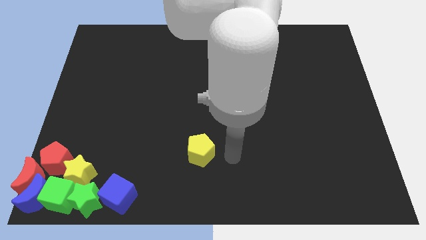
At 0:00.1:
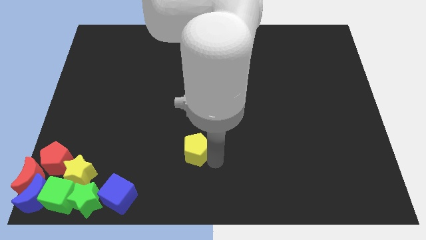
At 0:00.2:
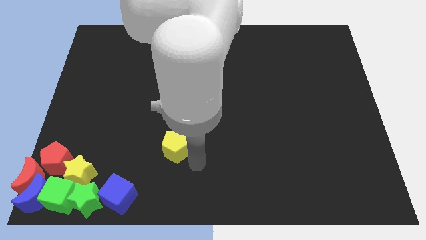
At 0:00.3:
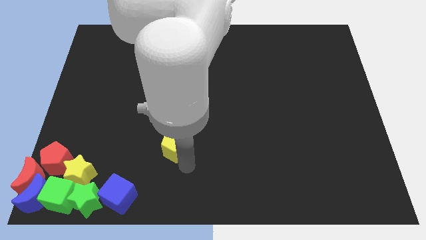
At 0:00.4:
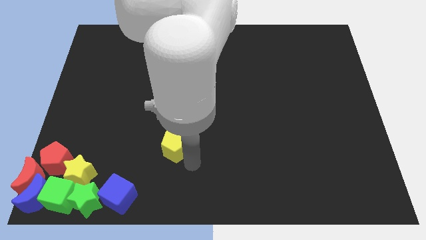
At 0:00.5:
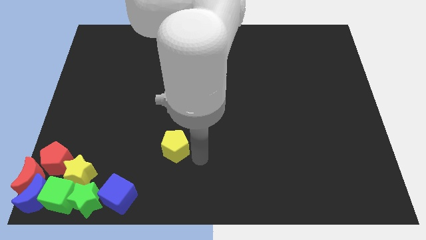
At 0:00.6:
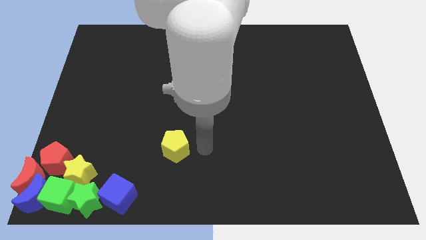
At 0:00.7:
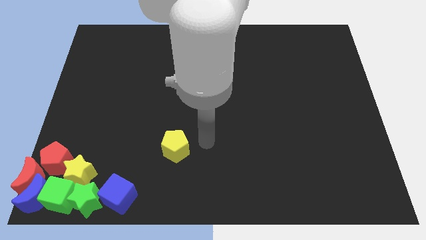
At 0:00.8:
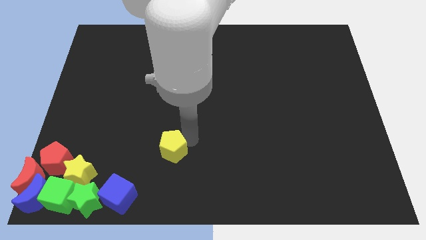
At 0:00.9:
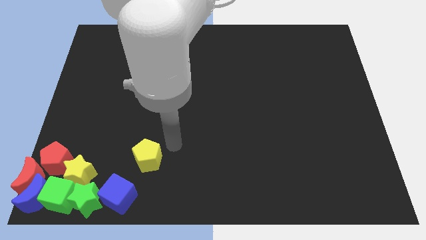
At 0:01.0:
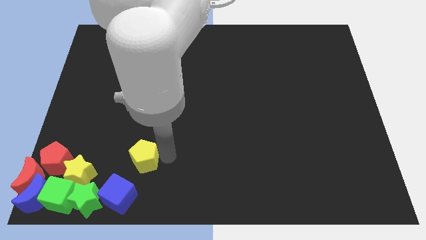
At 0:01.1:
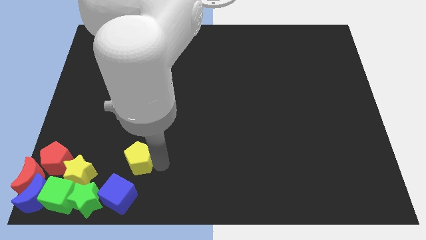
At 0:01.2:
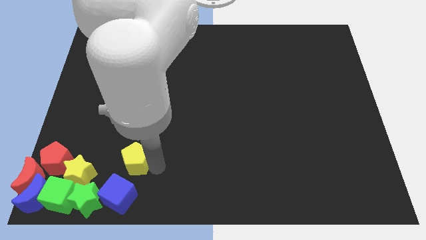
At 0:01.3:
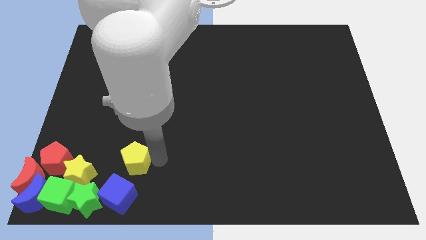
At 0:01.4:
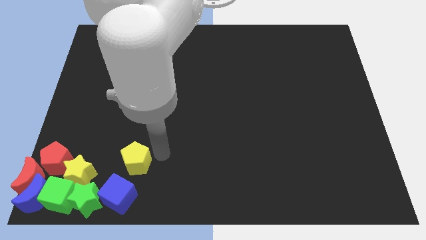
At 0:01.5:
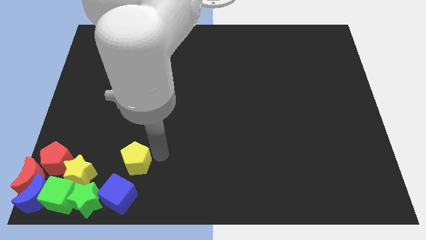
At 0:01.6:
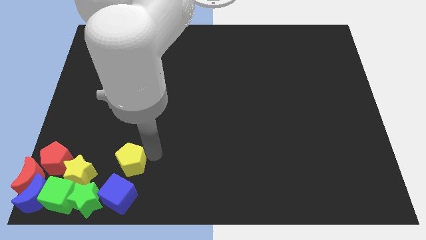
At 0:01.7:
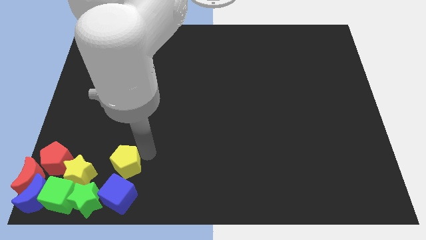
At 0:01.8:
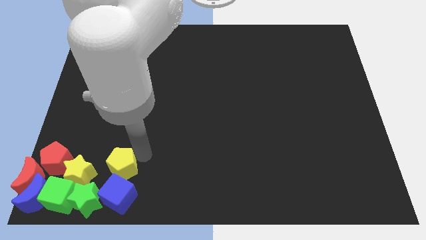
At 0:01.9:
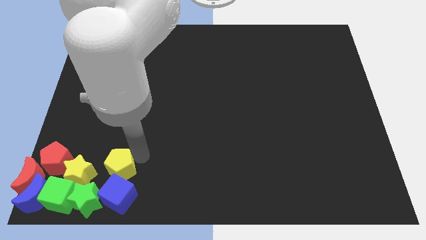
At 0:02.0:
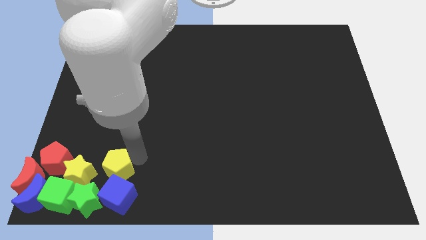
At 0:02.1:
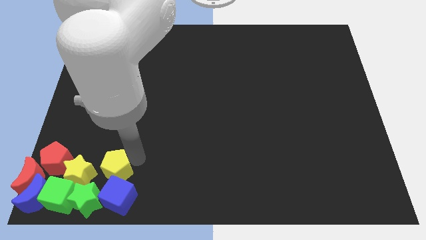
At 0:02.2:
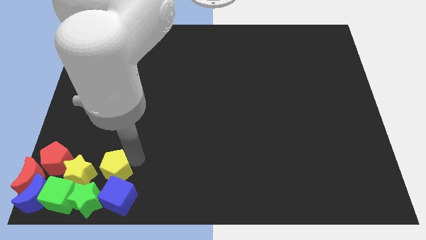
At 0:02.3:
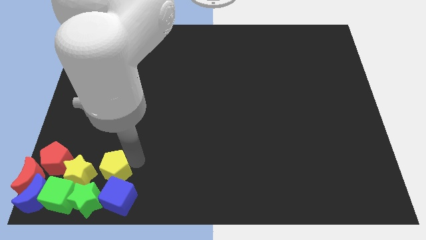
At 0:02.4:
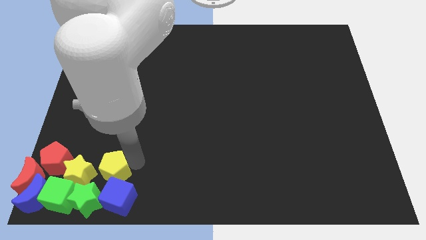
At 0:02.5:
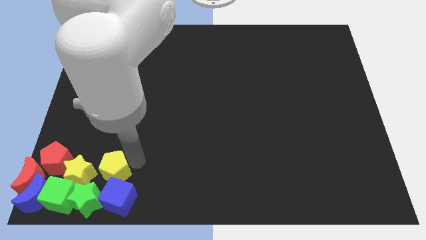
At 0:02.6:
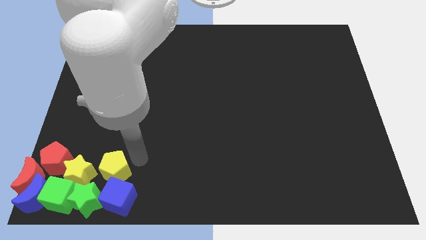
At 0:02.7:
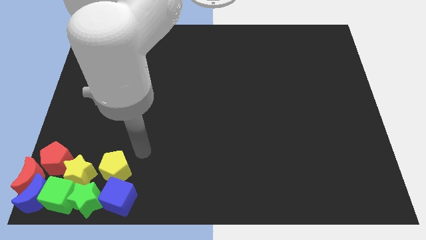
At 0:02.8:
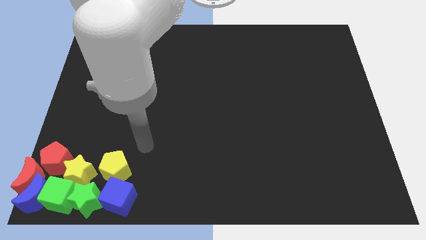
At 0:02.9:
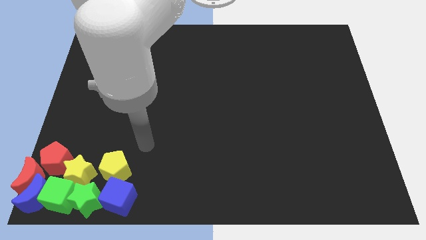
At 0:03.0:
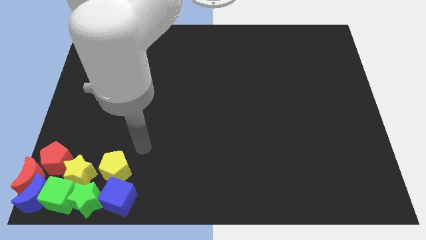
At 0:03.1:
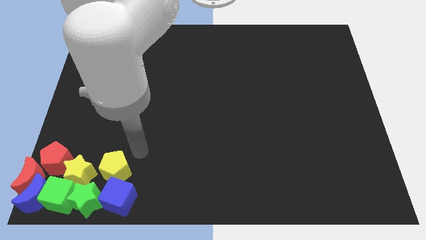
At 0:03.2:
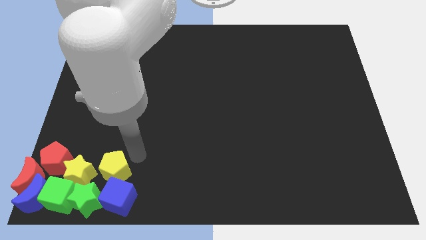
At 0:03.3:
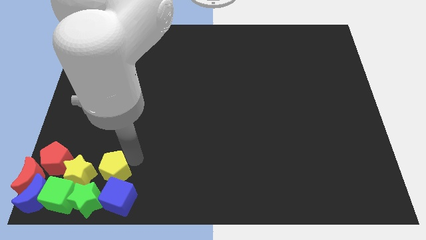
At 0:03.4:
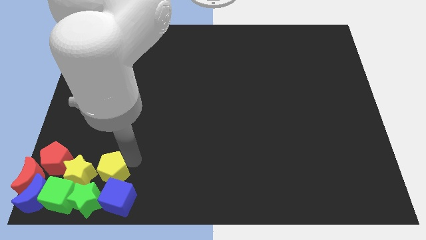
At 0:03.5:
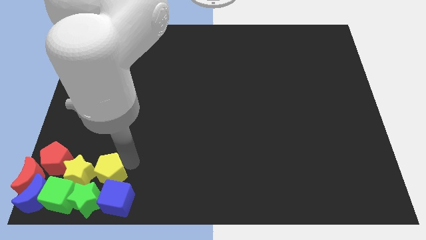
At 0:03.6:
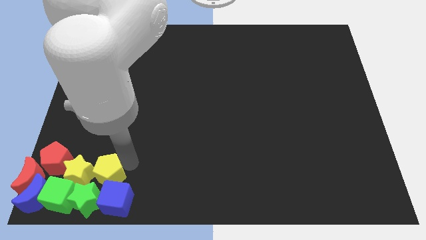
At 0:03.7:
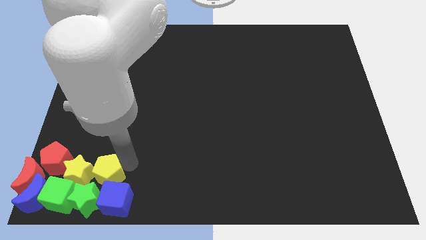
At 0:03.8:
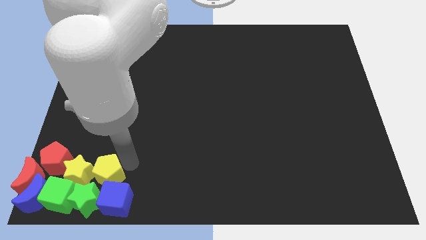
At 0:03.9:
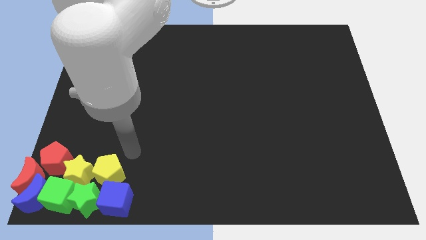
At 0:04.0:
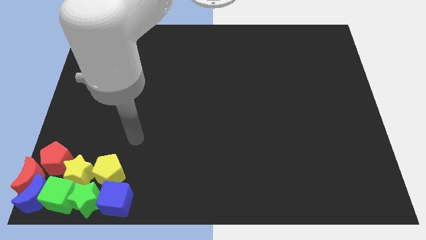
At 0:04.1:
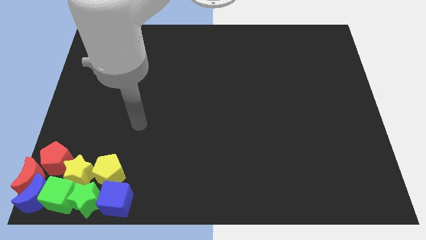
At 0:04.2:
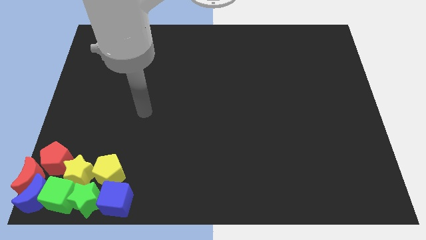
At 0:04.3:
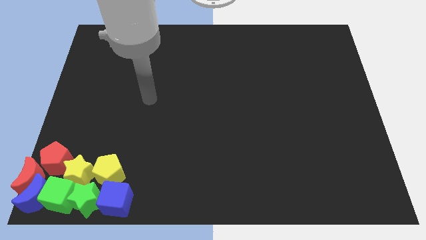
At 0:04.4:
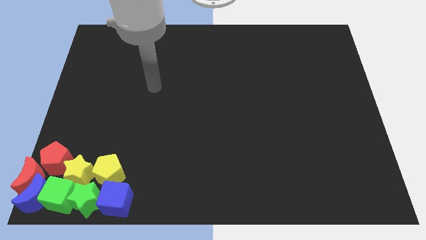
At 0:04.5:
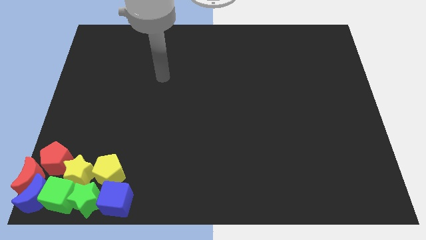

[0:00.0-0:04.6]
move the yellow pentagon towards the group of blocks

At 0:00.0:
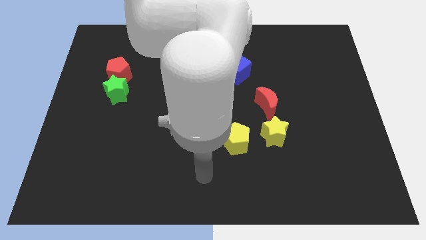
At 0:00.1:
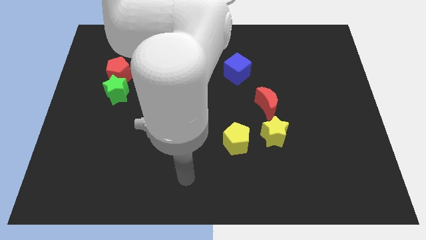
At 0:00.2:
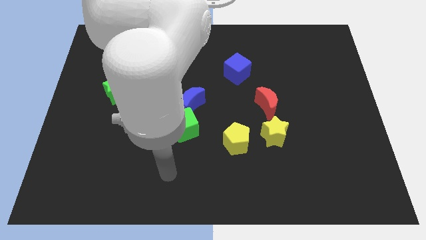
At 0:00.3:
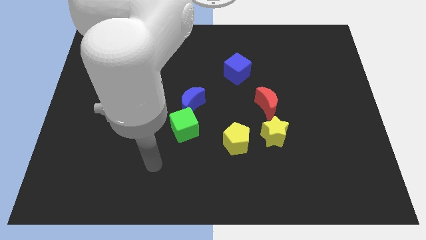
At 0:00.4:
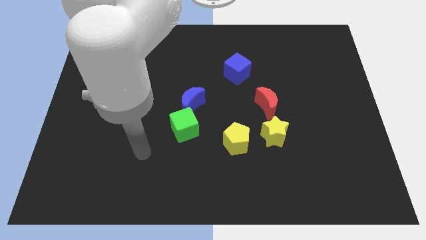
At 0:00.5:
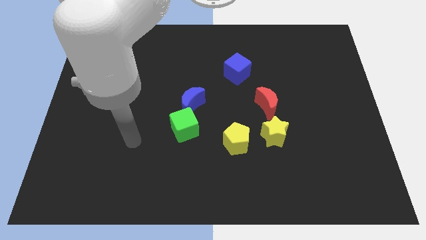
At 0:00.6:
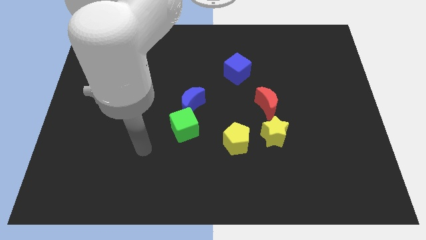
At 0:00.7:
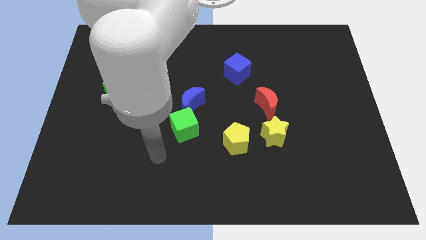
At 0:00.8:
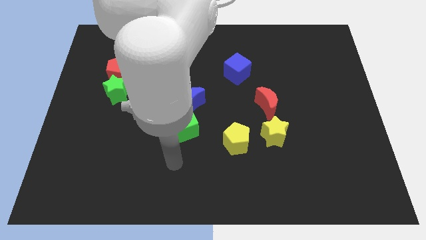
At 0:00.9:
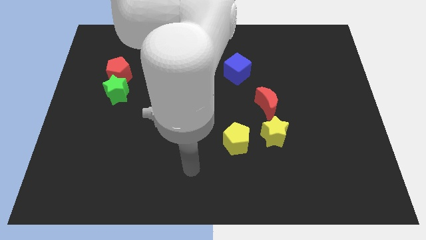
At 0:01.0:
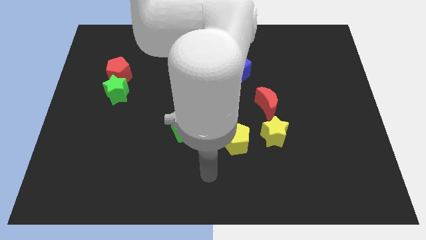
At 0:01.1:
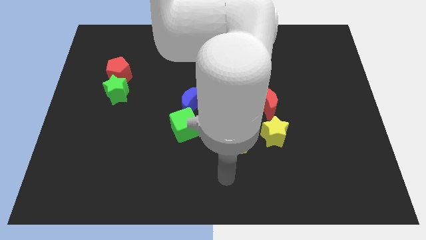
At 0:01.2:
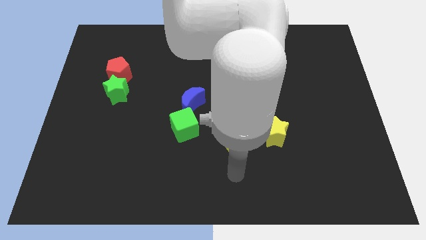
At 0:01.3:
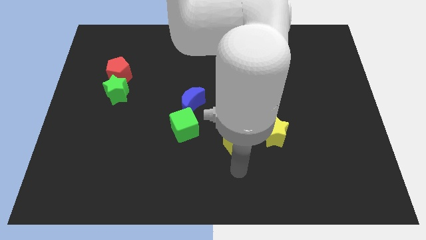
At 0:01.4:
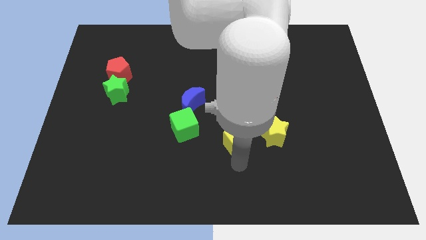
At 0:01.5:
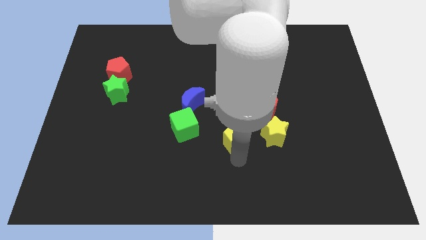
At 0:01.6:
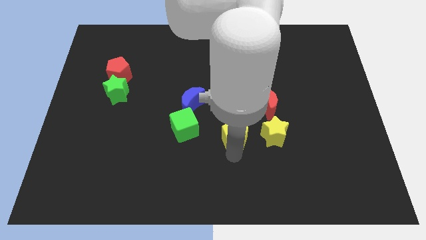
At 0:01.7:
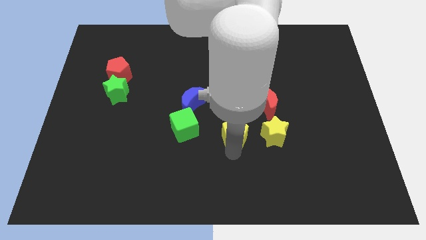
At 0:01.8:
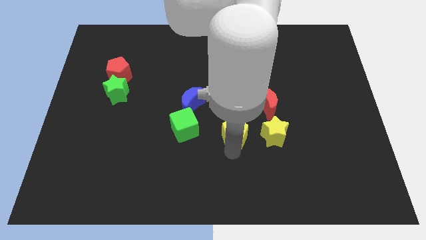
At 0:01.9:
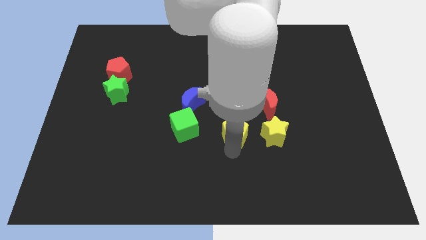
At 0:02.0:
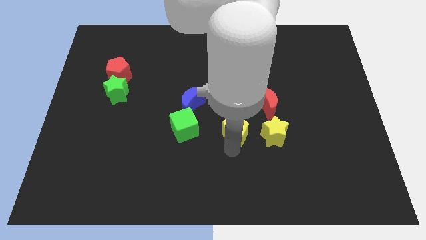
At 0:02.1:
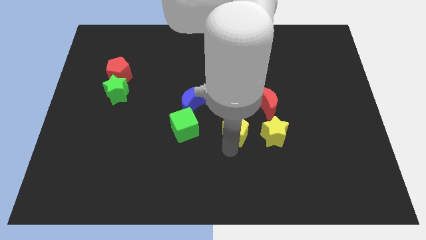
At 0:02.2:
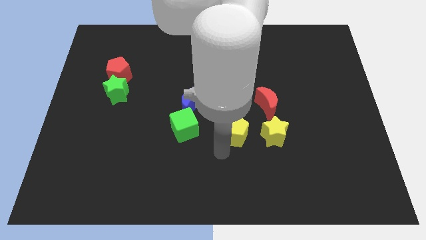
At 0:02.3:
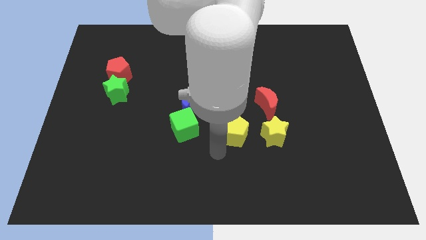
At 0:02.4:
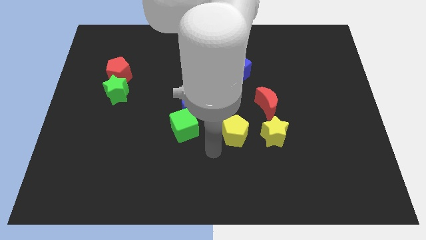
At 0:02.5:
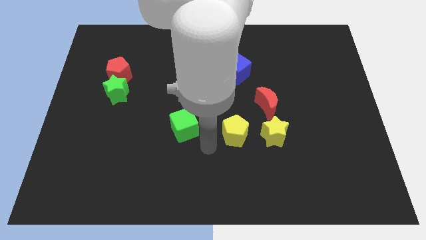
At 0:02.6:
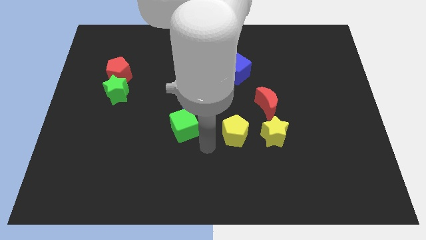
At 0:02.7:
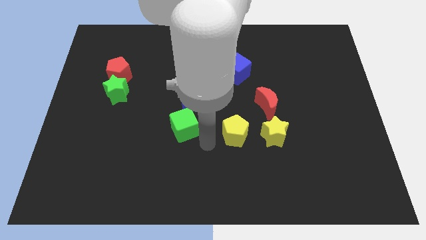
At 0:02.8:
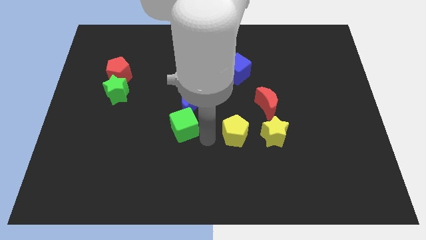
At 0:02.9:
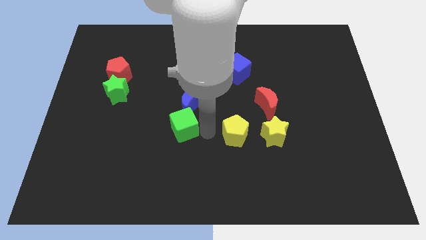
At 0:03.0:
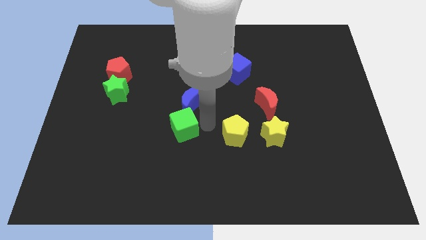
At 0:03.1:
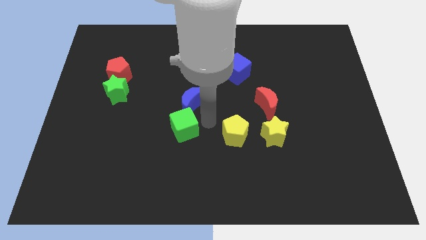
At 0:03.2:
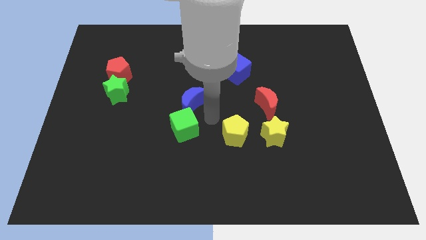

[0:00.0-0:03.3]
put the yellow pentagon in between the yellow star and green cube

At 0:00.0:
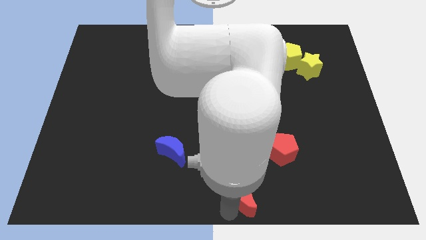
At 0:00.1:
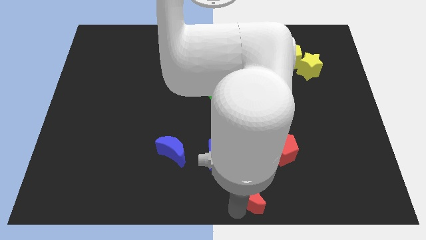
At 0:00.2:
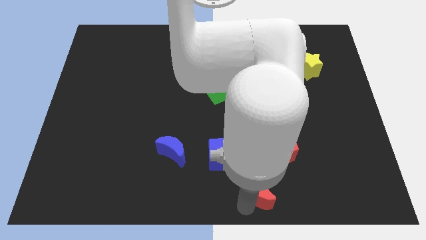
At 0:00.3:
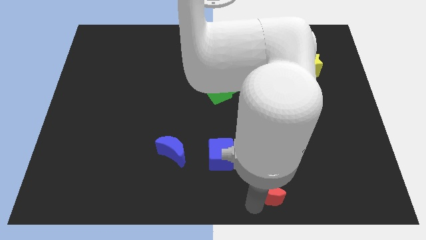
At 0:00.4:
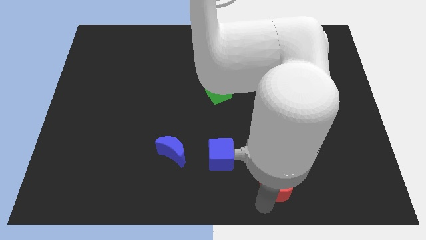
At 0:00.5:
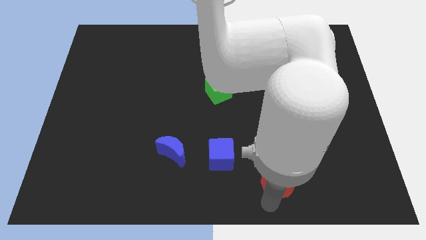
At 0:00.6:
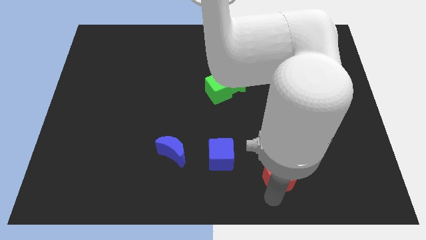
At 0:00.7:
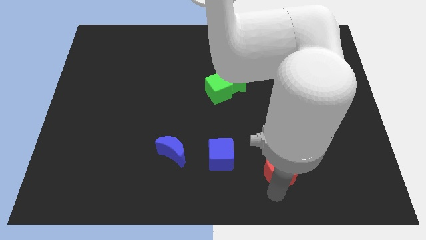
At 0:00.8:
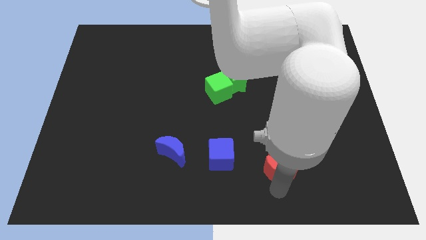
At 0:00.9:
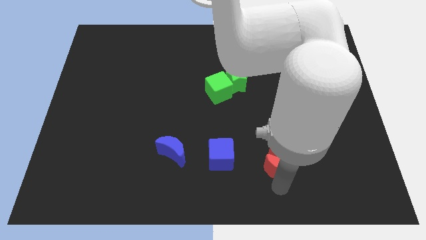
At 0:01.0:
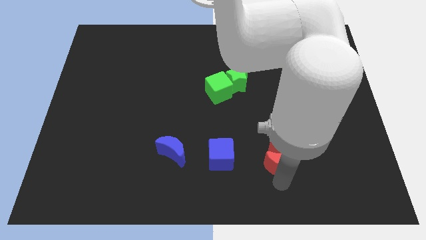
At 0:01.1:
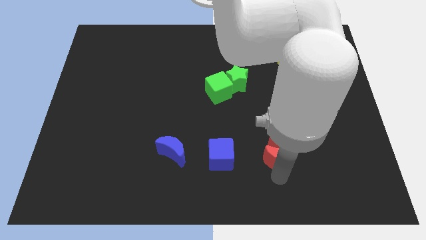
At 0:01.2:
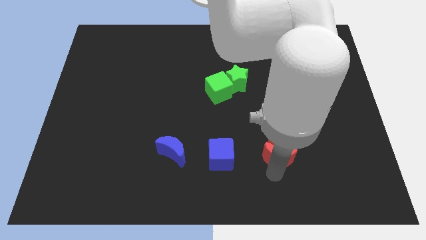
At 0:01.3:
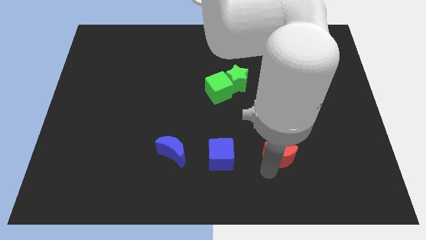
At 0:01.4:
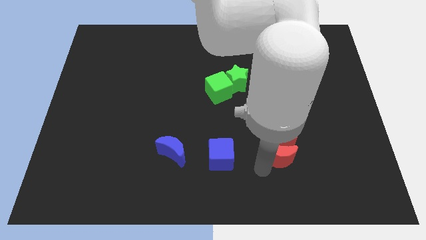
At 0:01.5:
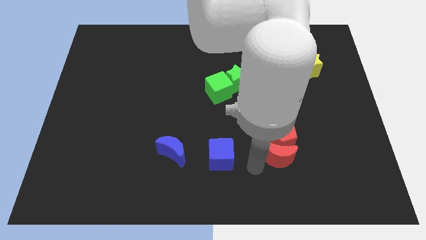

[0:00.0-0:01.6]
push the red moon below into red pentagon
